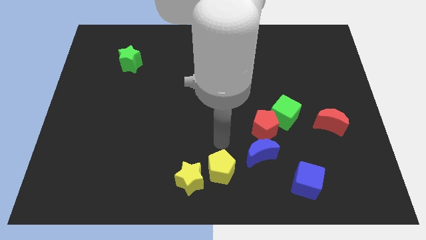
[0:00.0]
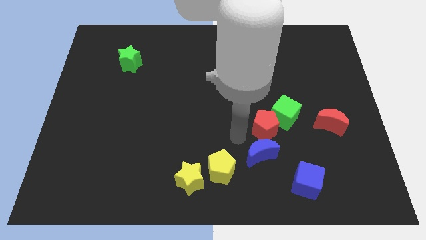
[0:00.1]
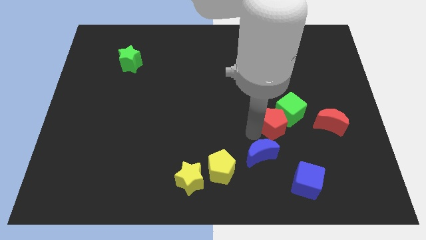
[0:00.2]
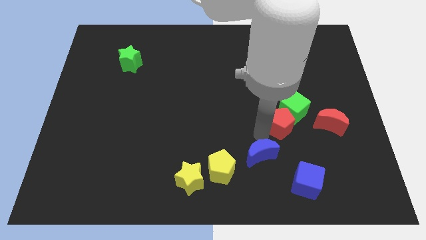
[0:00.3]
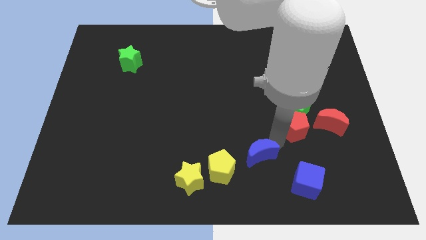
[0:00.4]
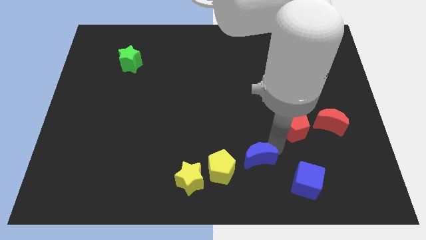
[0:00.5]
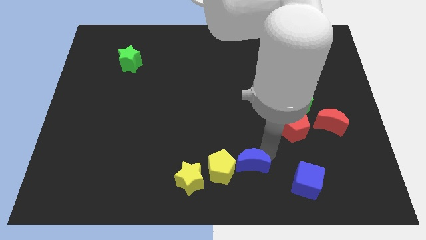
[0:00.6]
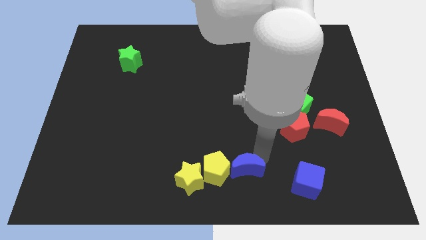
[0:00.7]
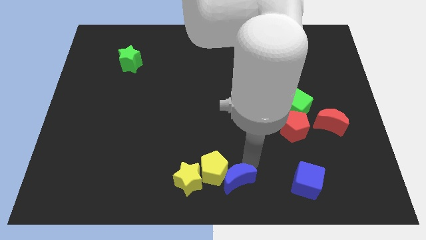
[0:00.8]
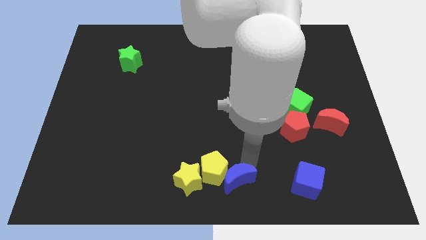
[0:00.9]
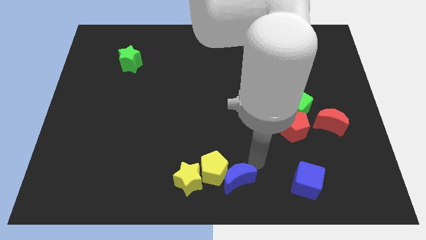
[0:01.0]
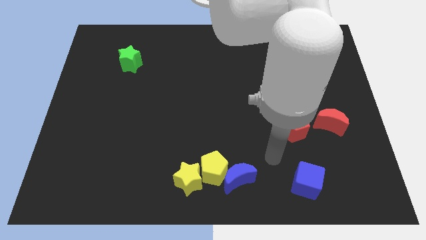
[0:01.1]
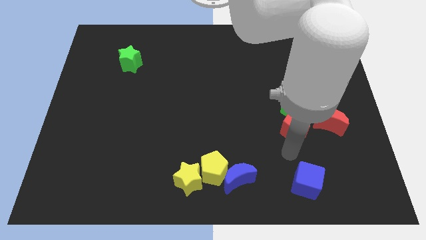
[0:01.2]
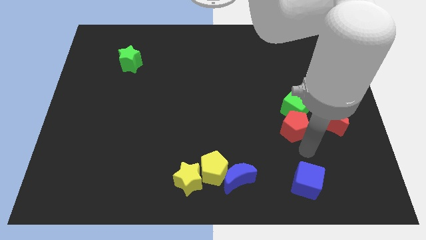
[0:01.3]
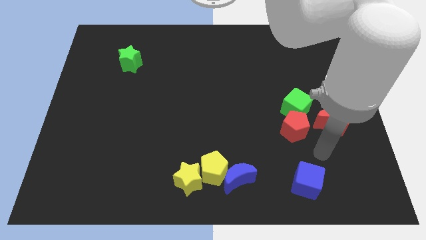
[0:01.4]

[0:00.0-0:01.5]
push the blue moon to the right of the yellow pentagon

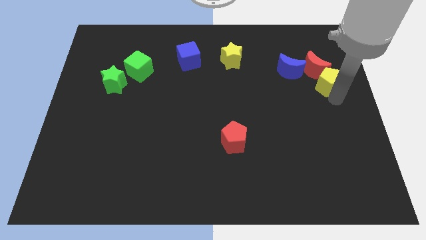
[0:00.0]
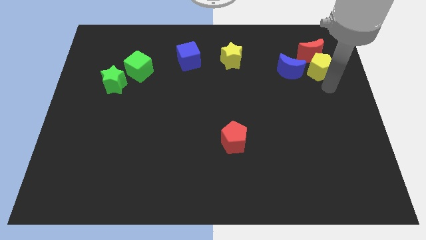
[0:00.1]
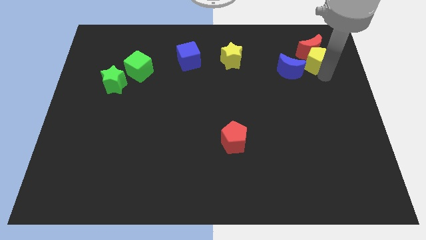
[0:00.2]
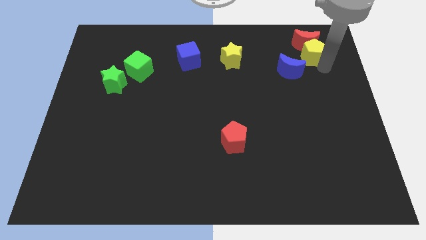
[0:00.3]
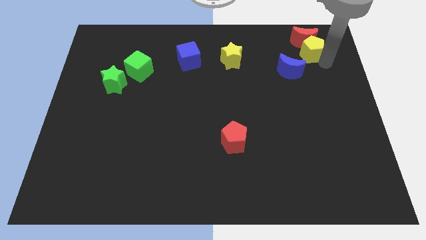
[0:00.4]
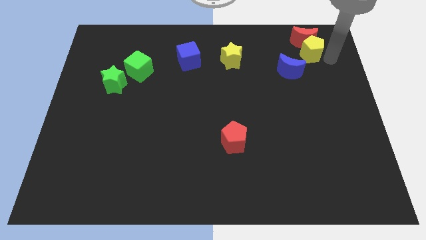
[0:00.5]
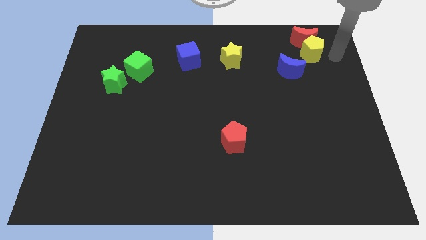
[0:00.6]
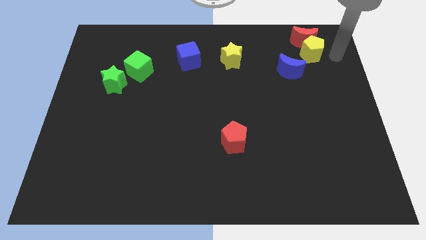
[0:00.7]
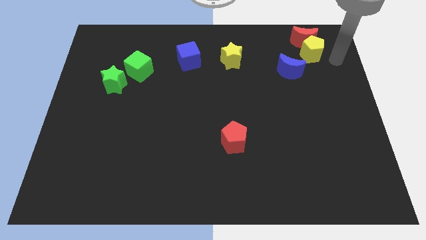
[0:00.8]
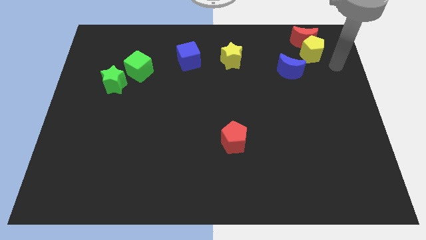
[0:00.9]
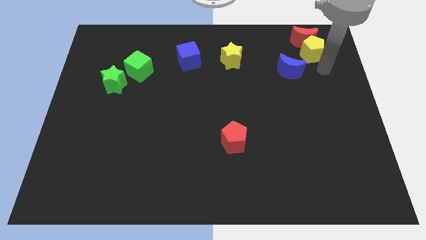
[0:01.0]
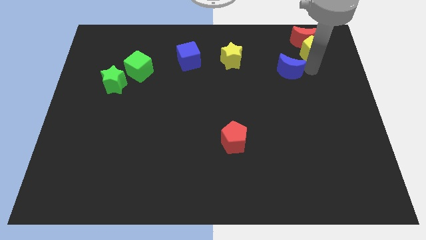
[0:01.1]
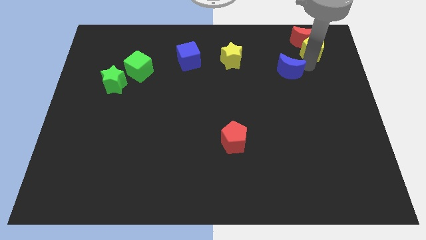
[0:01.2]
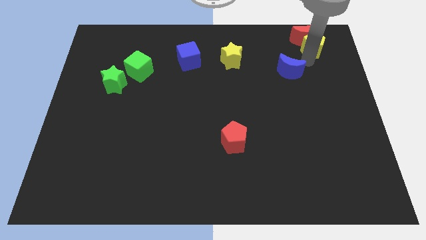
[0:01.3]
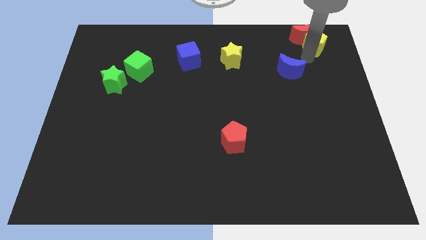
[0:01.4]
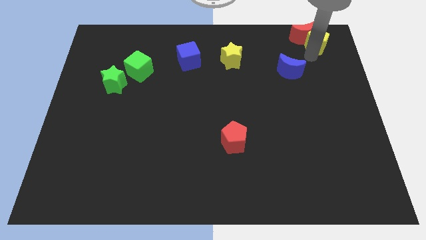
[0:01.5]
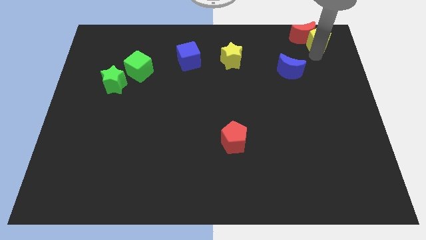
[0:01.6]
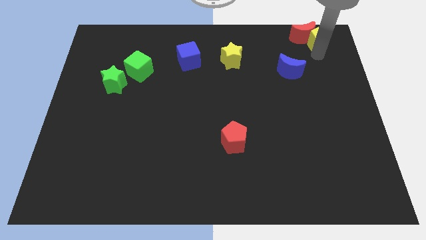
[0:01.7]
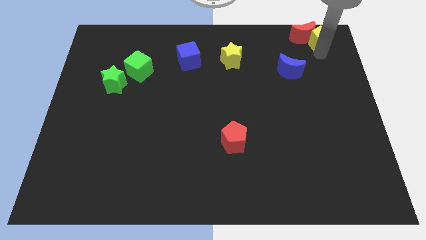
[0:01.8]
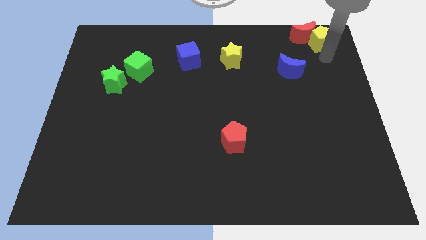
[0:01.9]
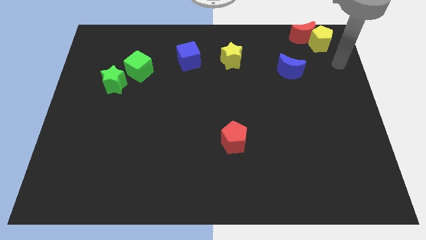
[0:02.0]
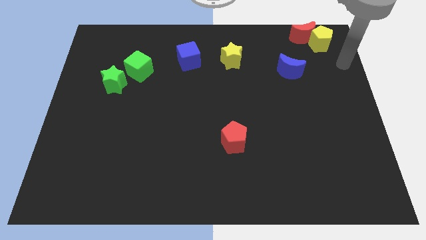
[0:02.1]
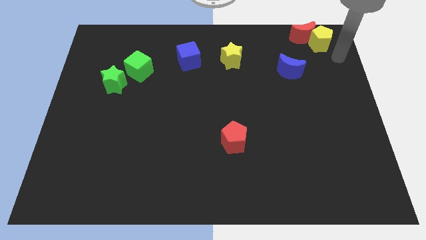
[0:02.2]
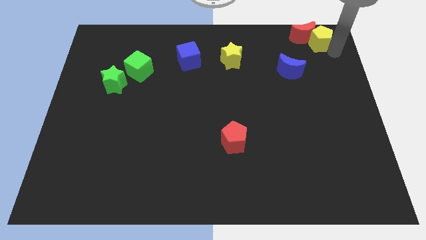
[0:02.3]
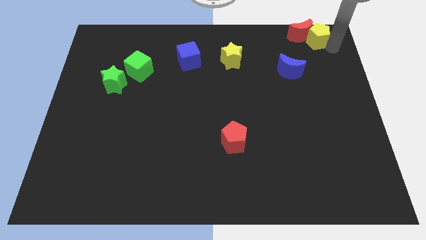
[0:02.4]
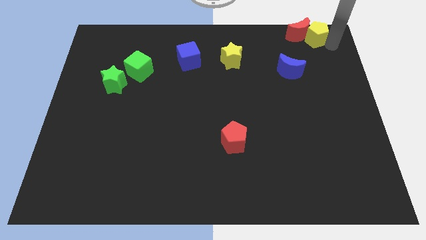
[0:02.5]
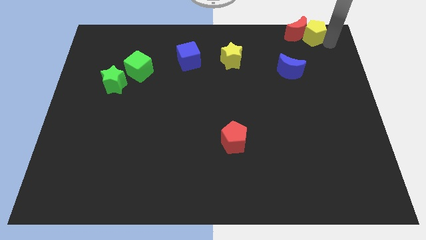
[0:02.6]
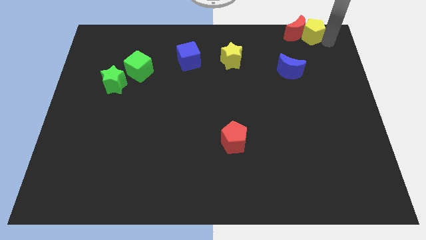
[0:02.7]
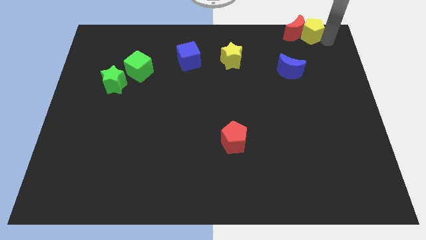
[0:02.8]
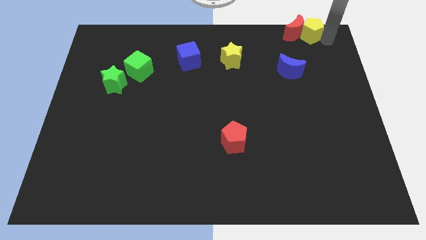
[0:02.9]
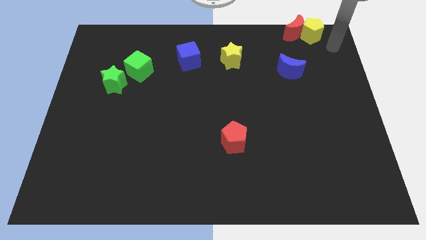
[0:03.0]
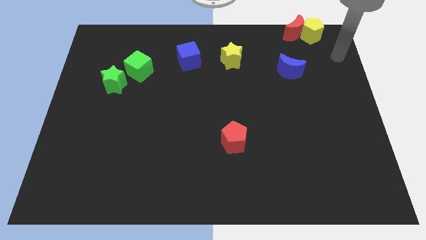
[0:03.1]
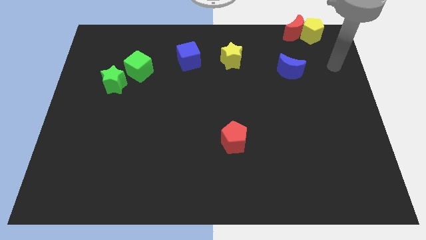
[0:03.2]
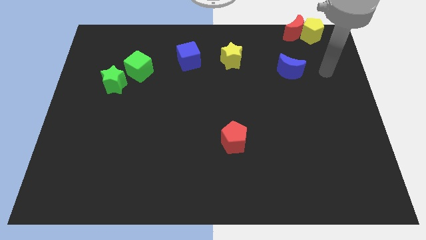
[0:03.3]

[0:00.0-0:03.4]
push the yellow pentagon and red moon on top right of the board

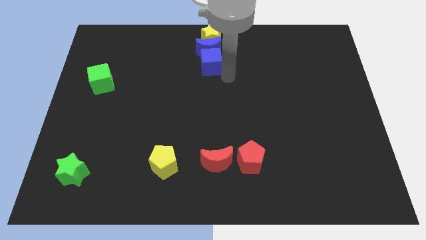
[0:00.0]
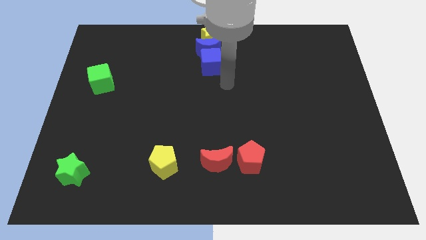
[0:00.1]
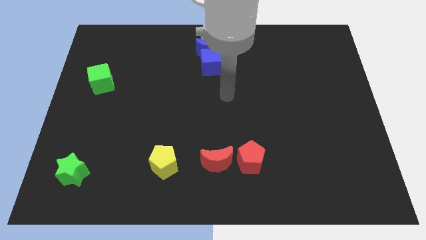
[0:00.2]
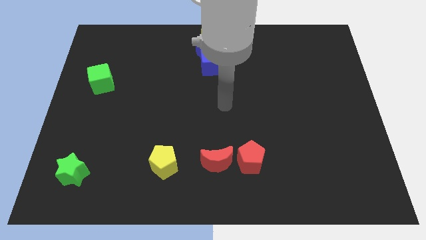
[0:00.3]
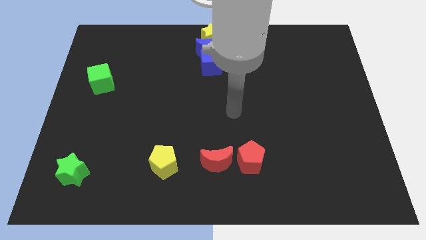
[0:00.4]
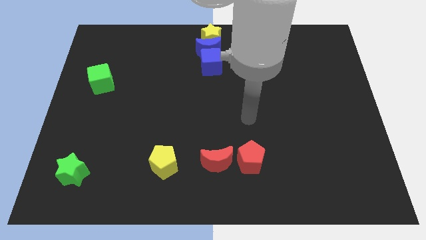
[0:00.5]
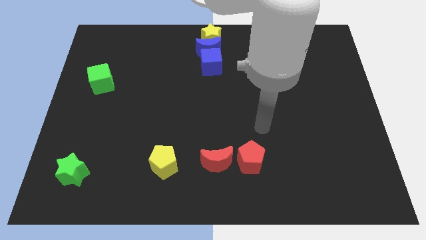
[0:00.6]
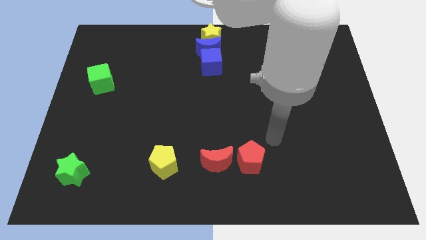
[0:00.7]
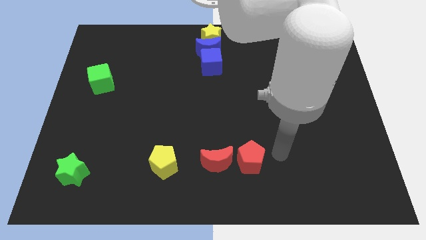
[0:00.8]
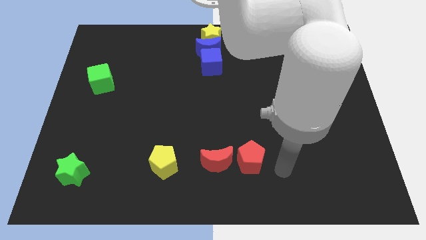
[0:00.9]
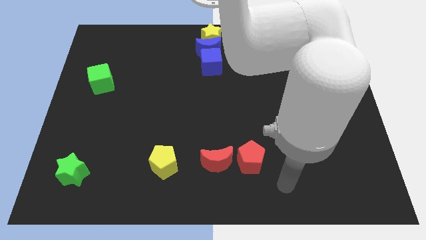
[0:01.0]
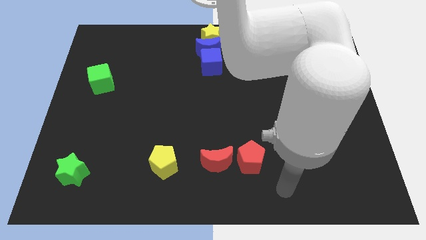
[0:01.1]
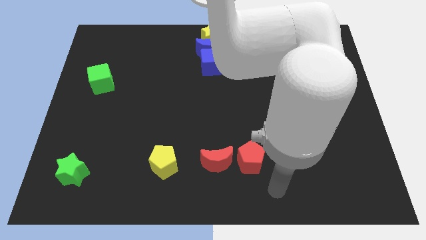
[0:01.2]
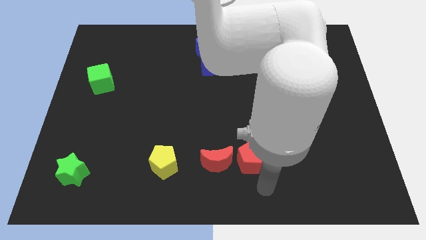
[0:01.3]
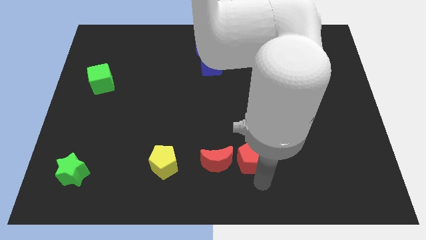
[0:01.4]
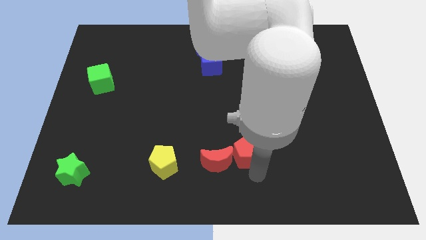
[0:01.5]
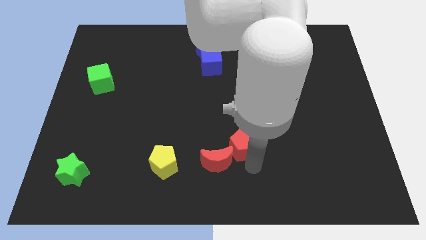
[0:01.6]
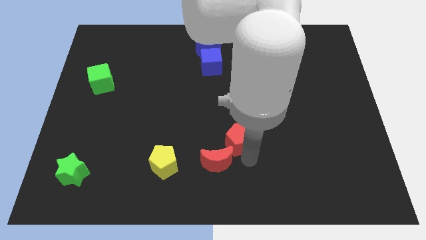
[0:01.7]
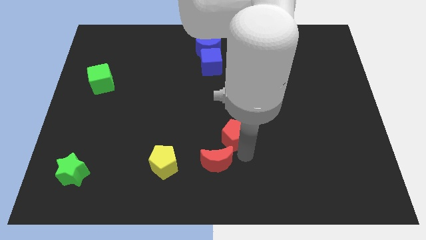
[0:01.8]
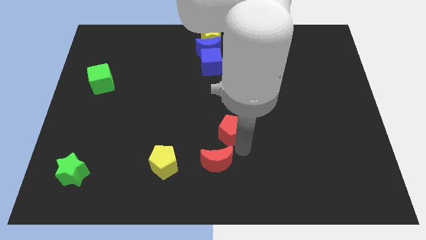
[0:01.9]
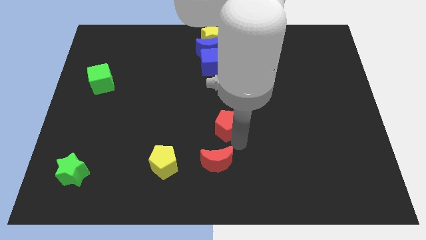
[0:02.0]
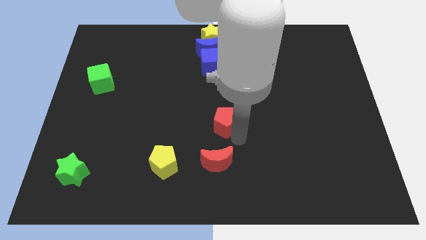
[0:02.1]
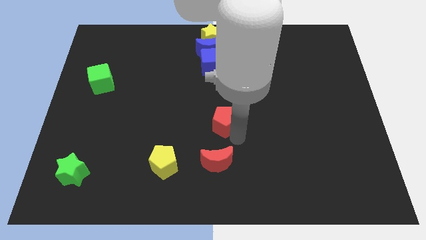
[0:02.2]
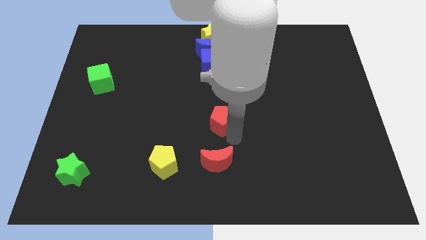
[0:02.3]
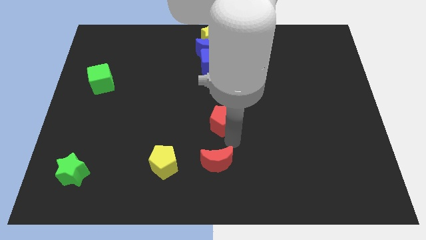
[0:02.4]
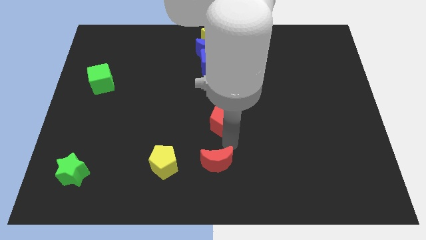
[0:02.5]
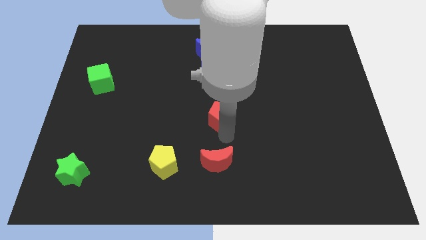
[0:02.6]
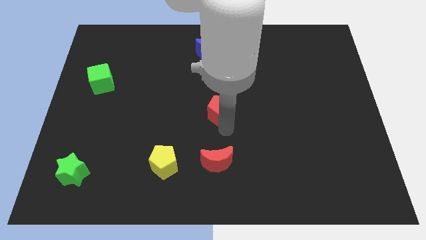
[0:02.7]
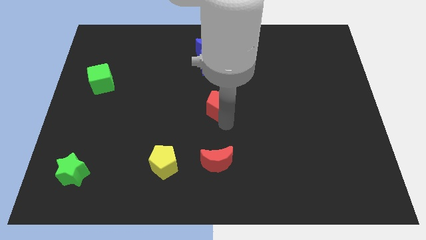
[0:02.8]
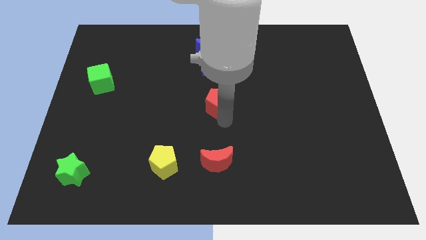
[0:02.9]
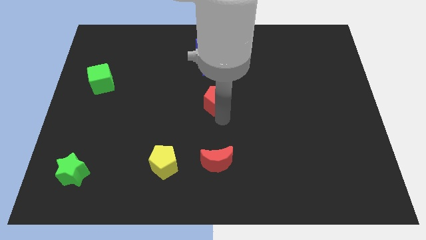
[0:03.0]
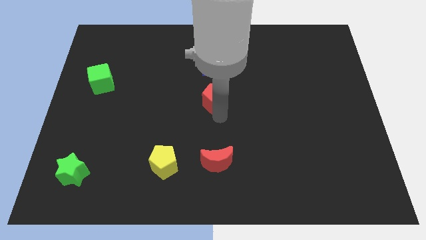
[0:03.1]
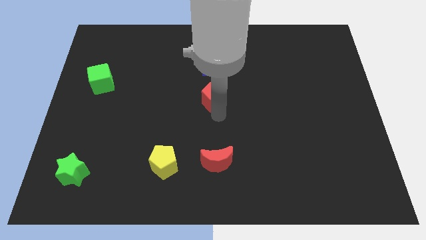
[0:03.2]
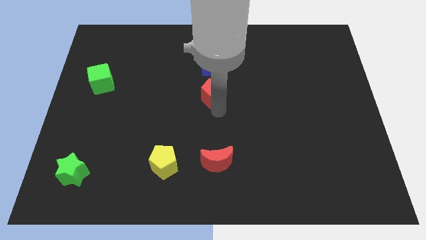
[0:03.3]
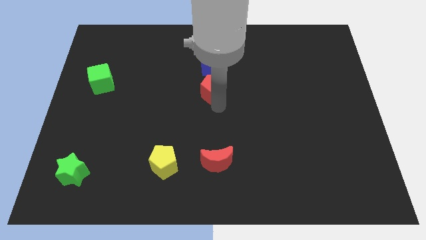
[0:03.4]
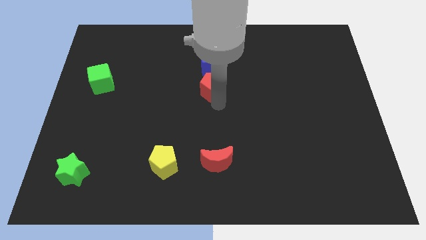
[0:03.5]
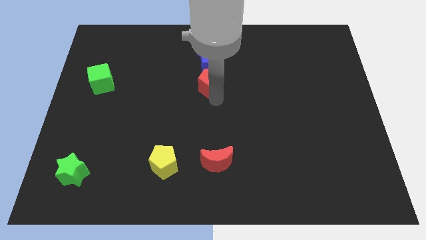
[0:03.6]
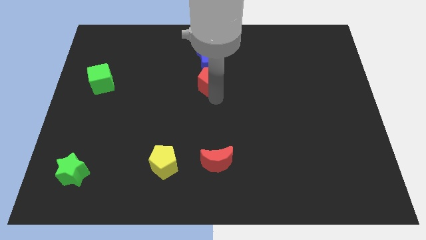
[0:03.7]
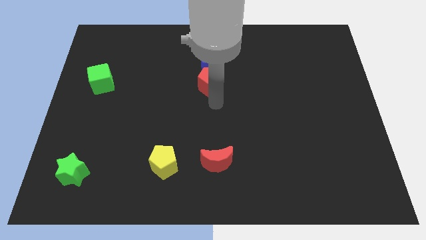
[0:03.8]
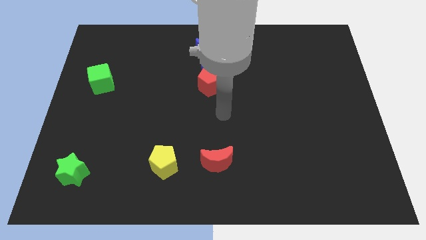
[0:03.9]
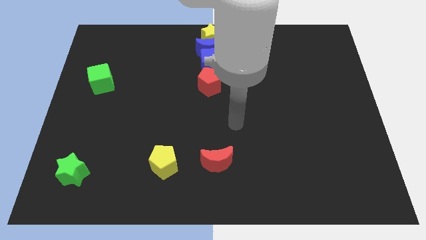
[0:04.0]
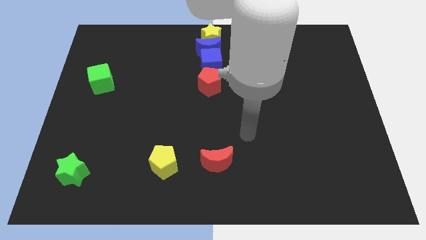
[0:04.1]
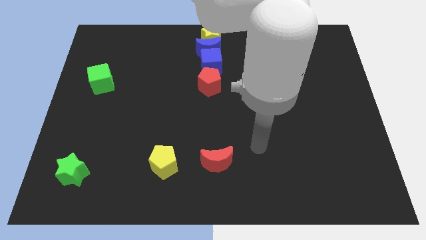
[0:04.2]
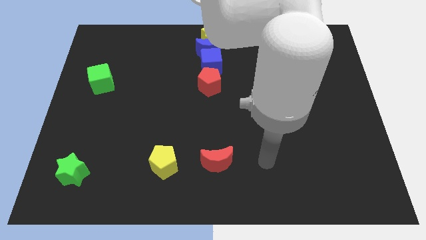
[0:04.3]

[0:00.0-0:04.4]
place the red pentagon in between the blue cube and red moon to form a line
